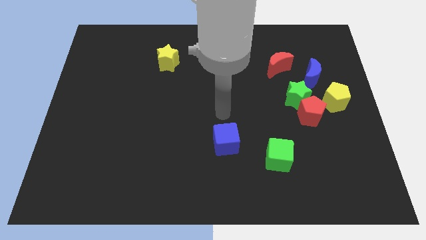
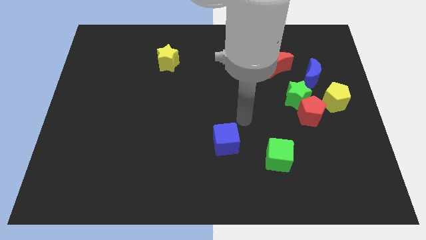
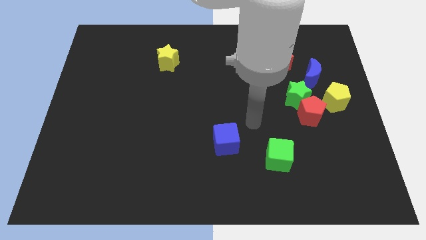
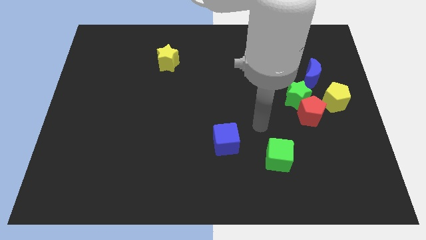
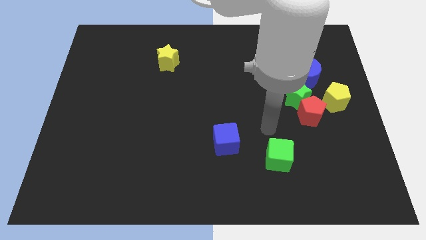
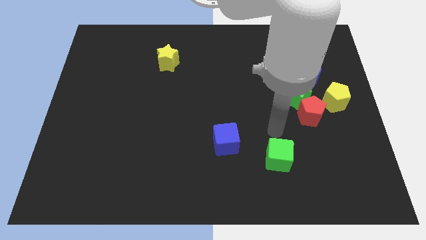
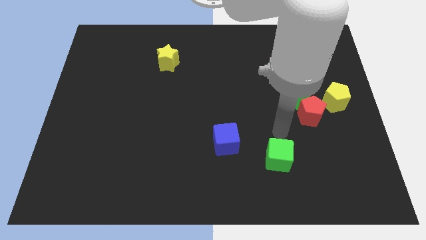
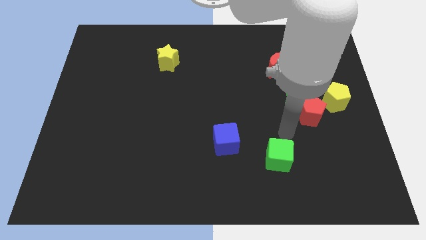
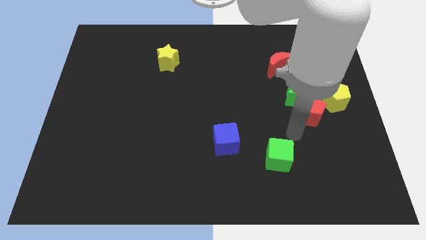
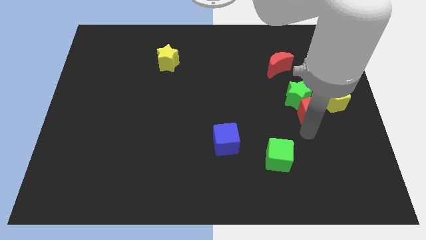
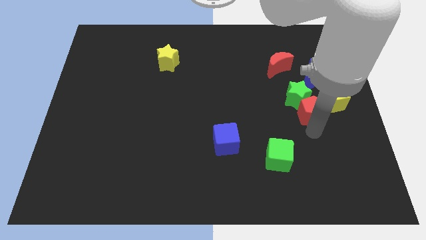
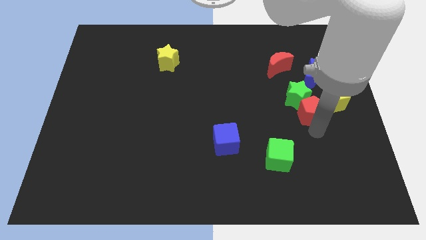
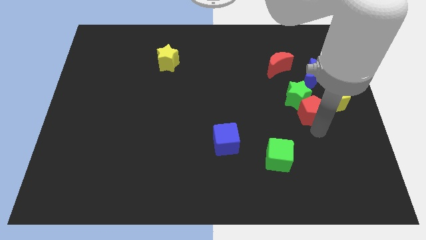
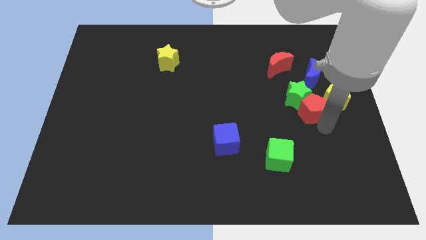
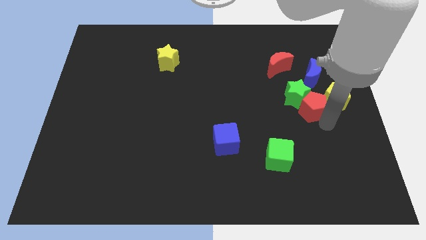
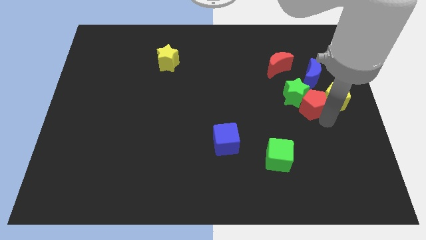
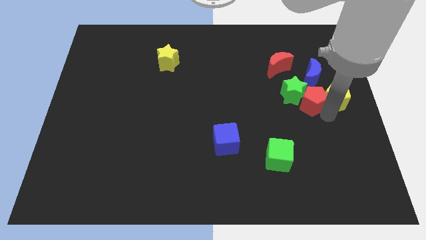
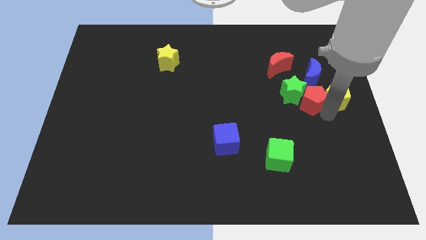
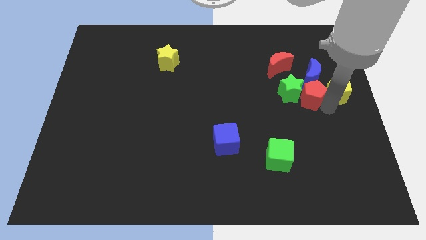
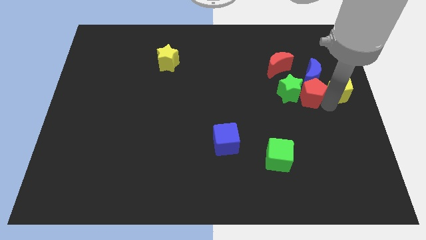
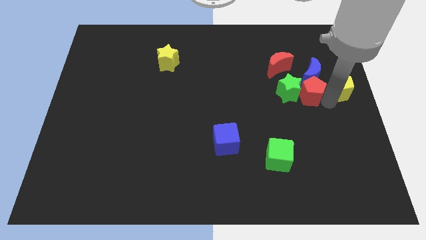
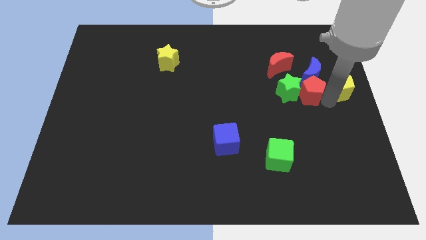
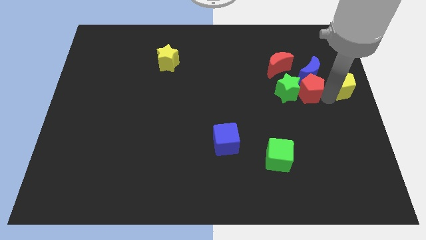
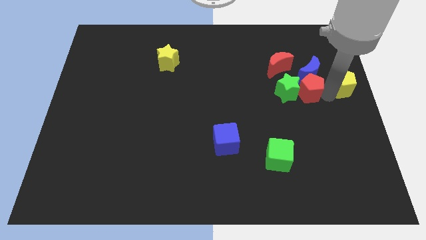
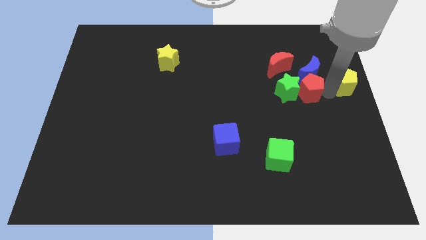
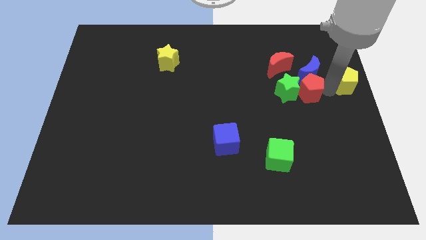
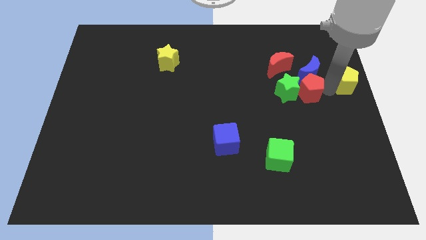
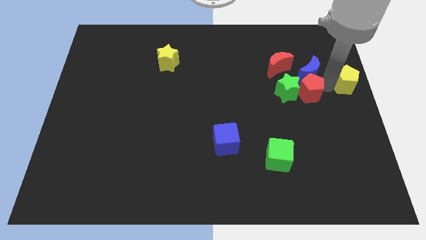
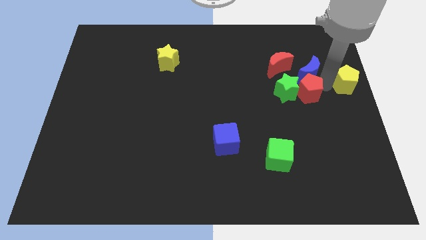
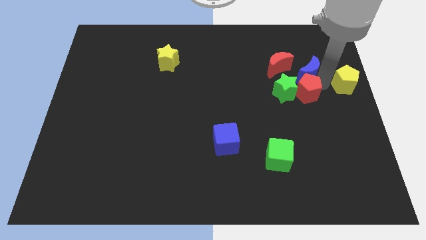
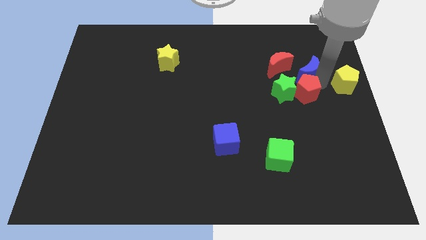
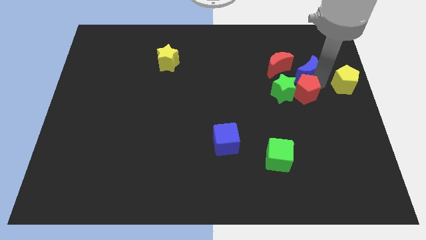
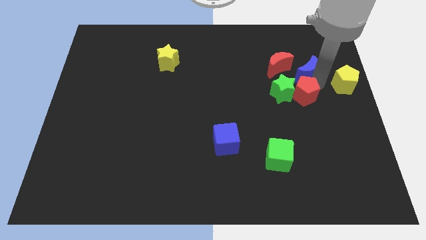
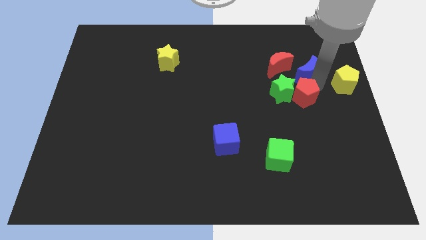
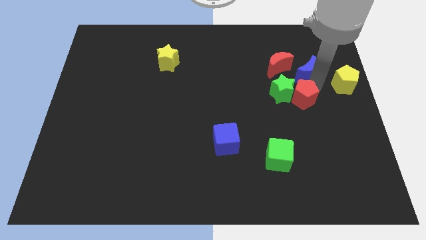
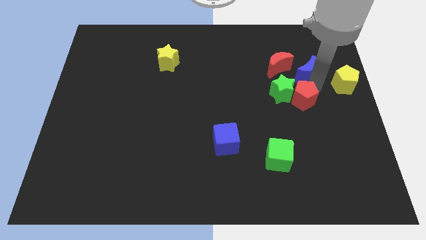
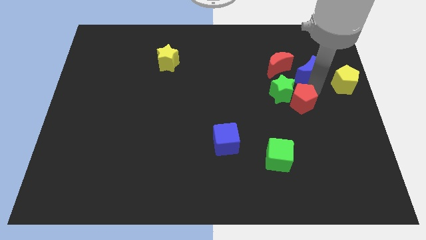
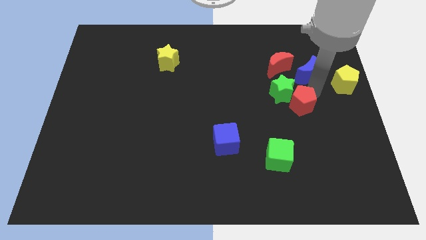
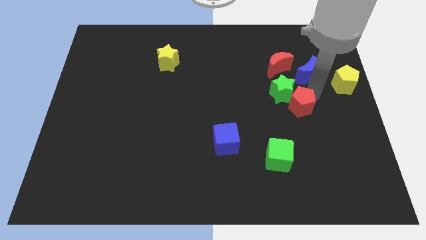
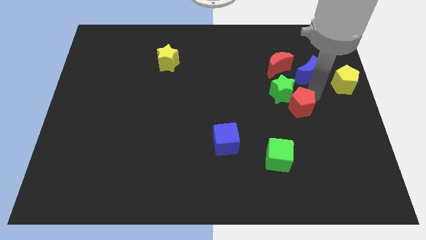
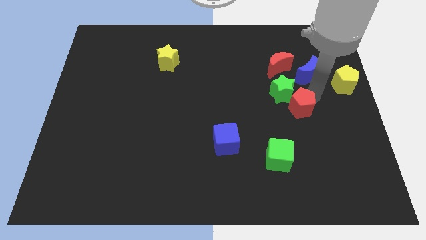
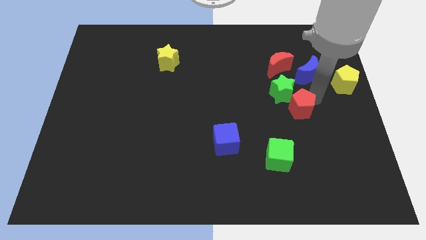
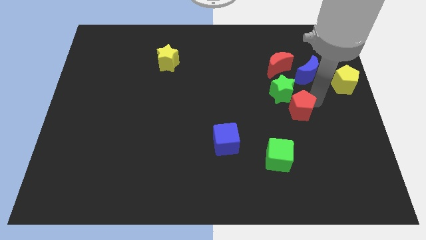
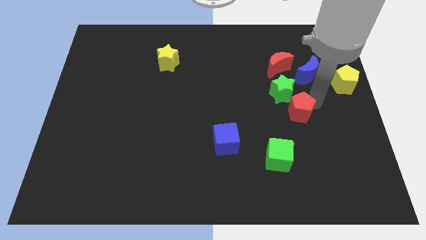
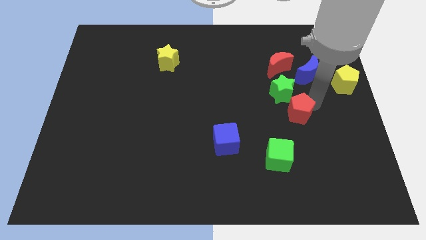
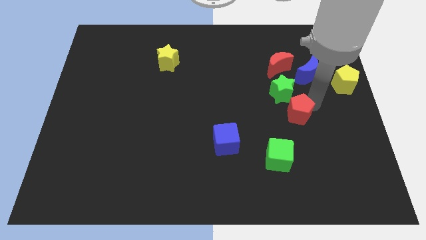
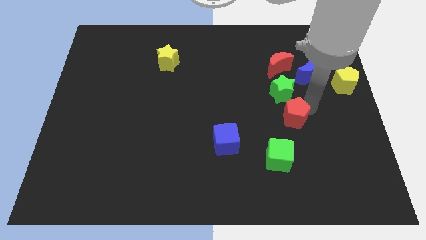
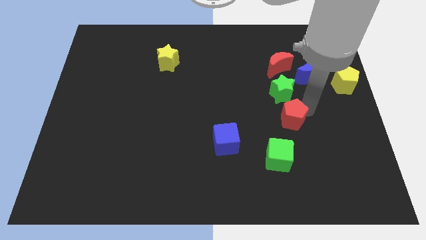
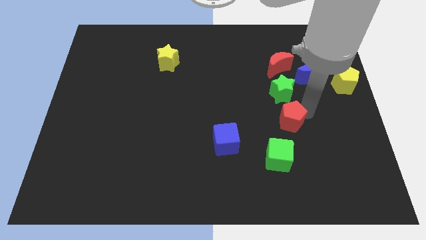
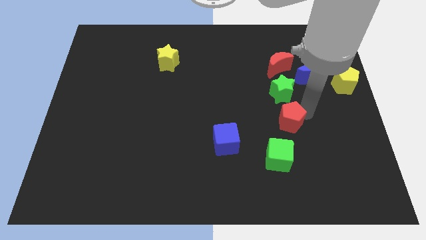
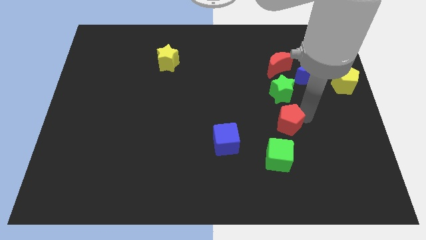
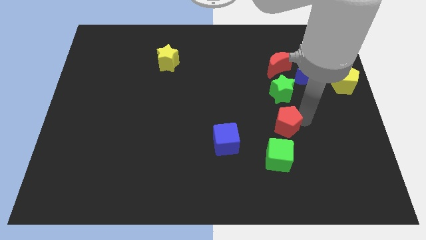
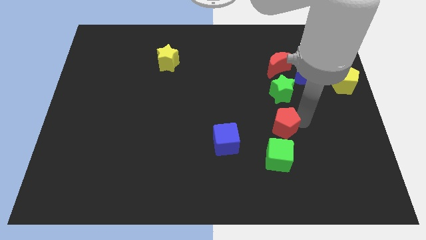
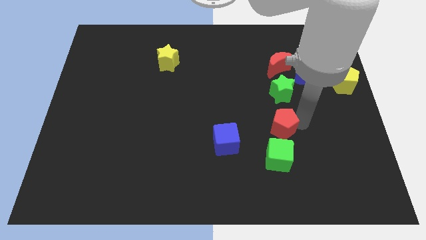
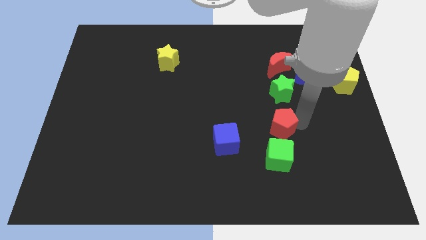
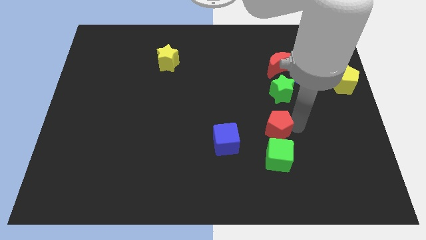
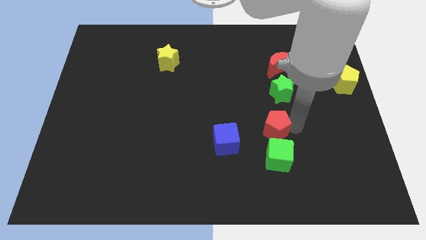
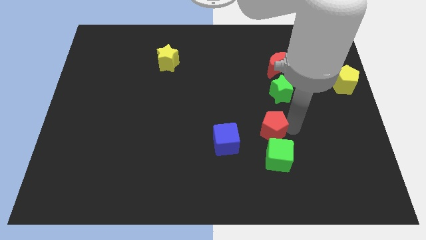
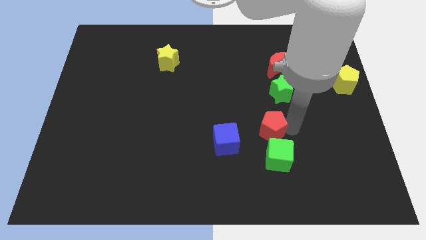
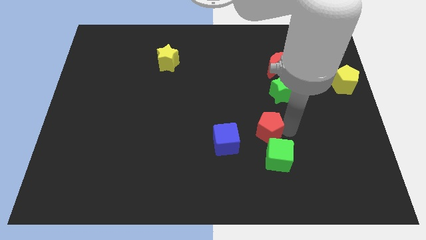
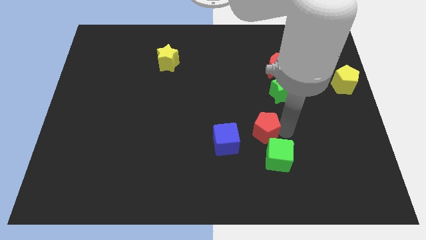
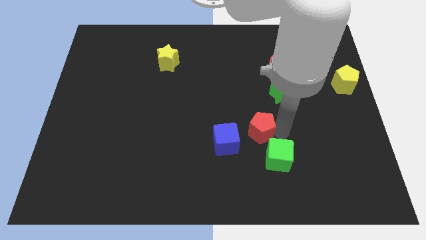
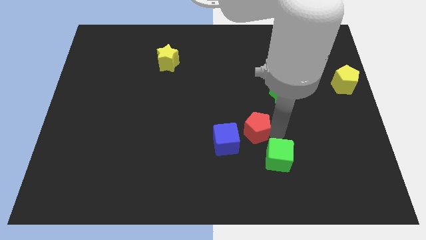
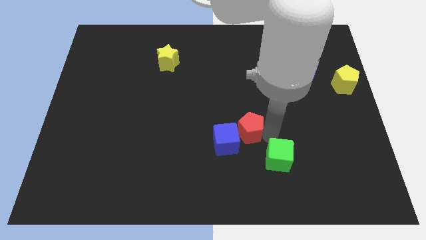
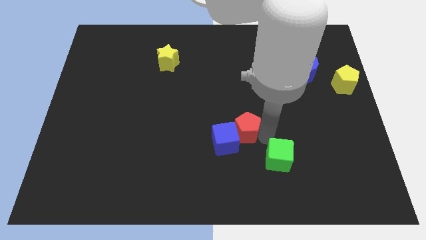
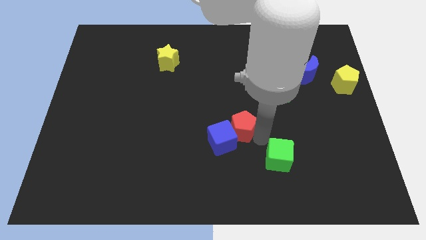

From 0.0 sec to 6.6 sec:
move the red pentagon next to the blue cube

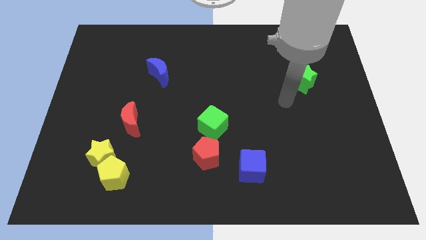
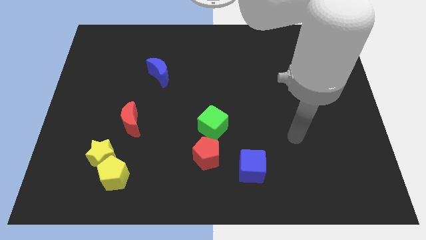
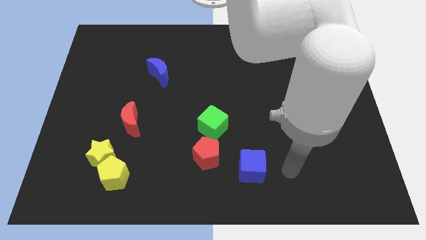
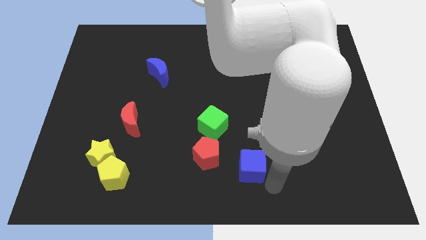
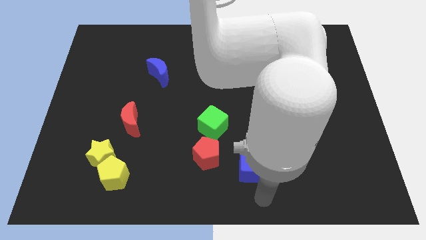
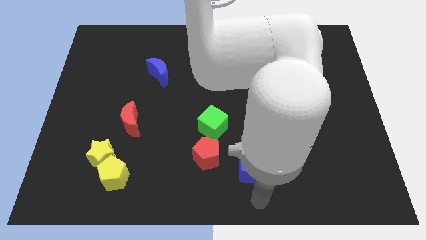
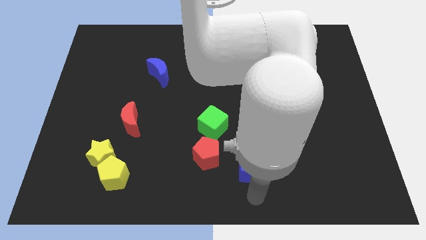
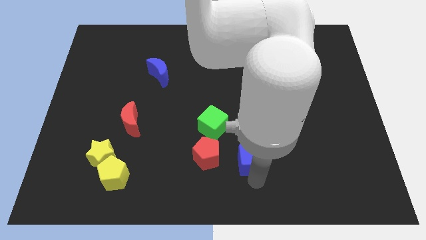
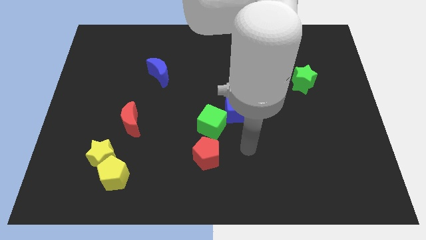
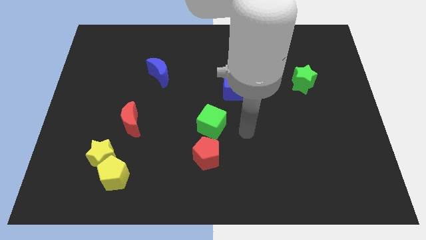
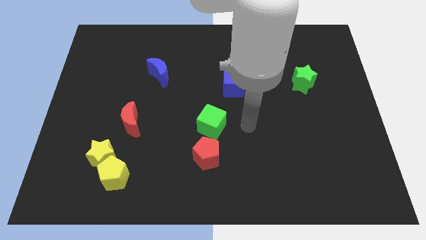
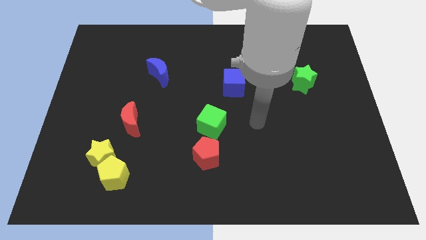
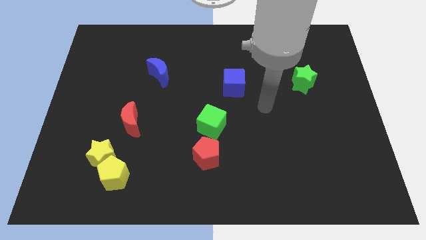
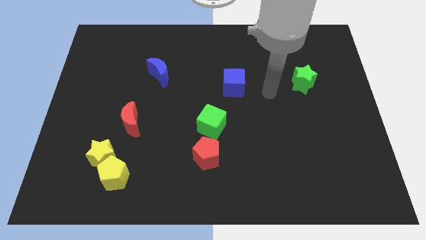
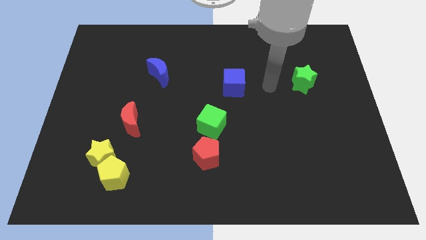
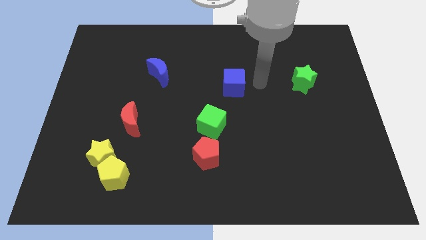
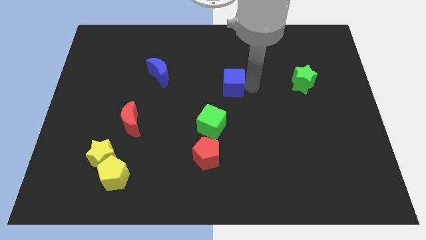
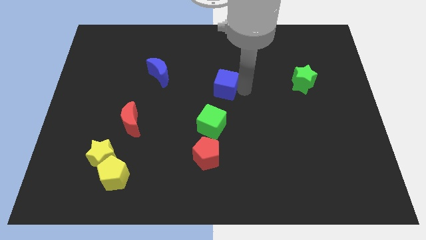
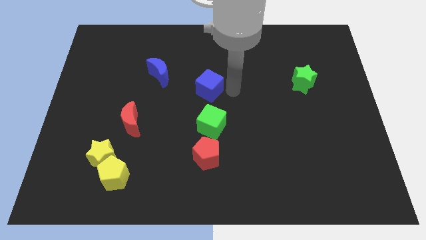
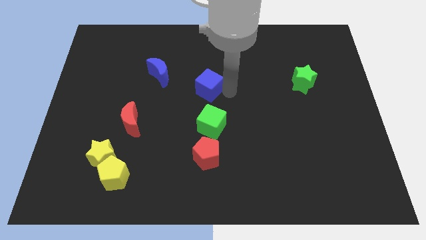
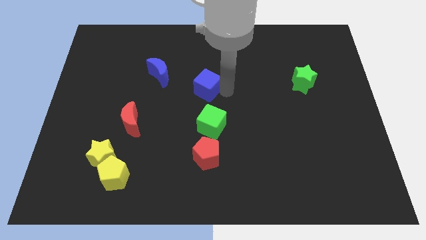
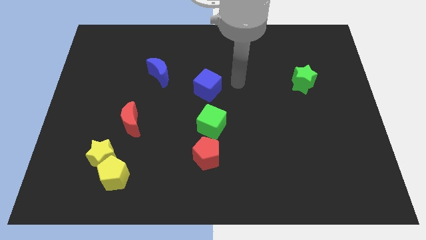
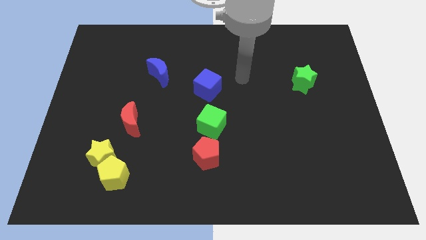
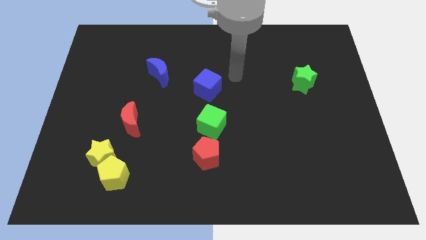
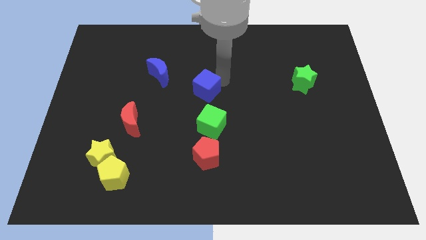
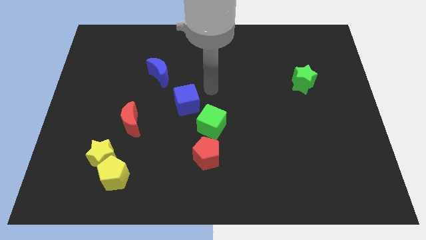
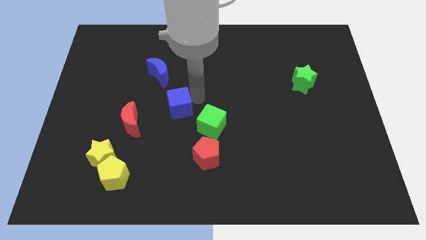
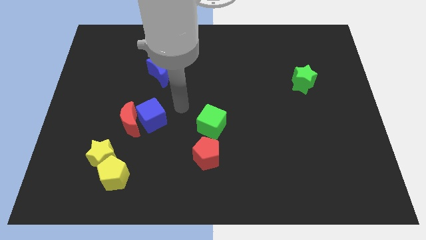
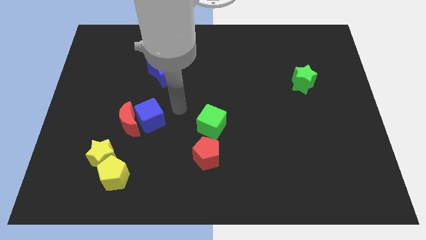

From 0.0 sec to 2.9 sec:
push the blue cube to the red moon
